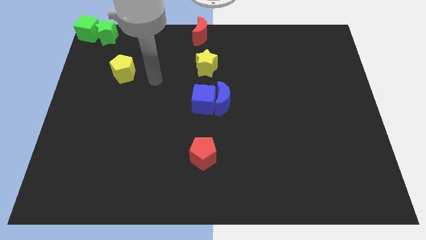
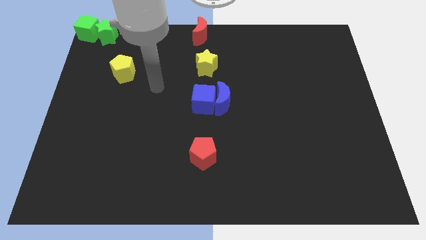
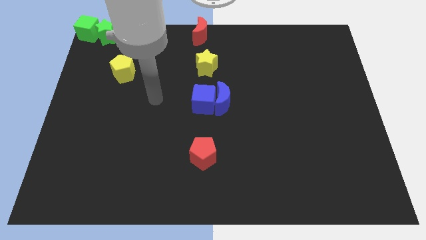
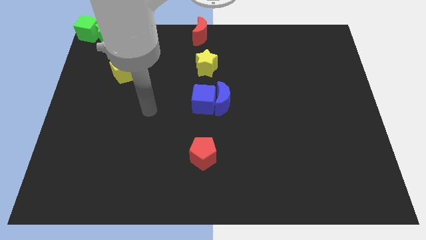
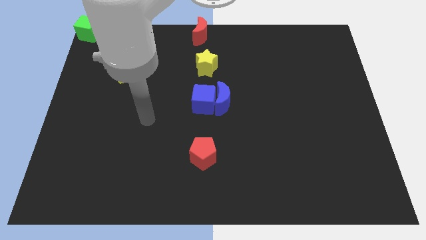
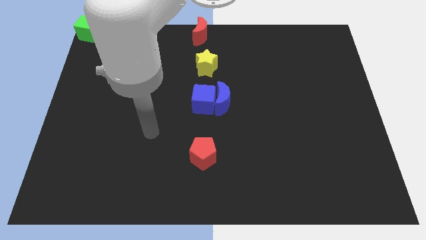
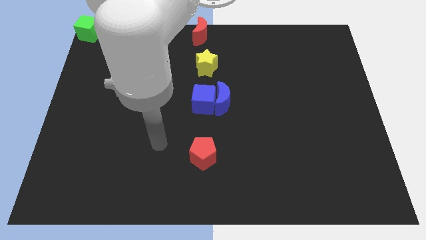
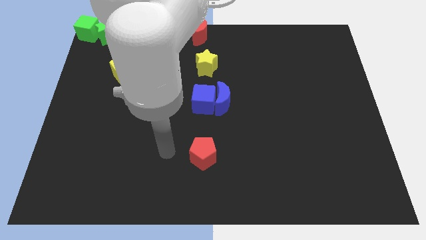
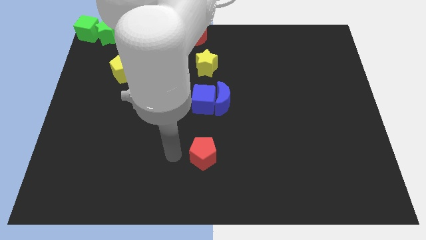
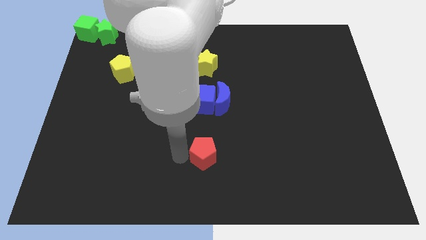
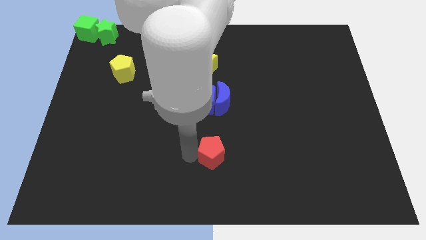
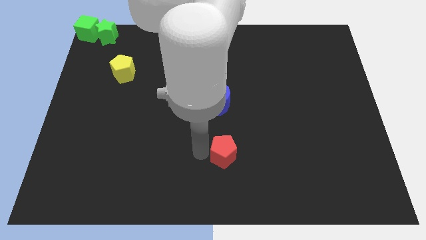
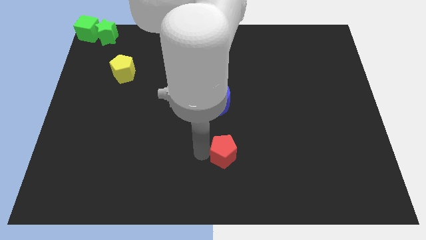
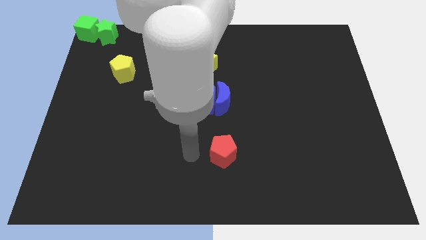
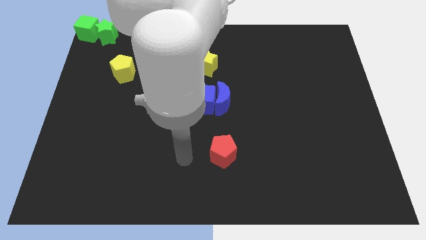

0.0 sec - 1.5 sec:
push the red pentagon underneath the blue moon

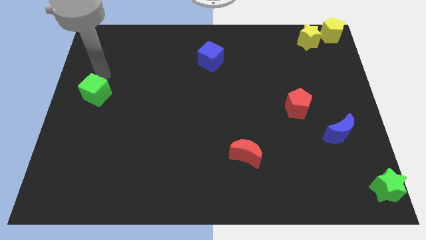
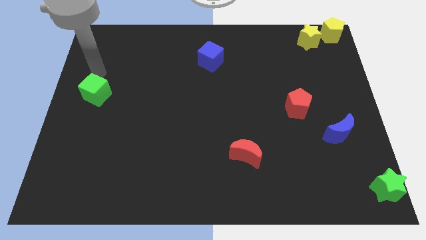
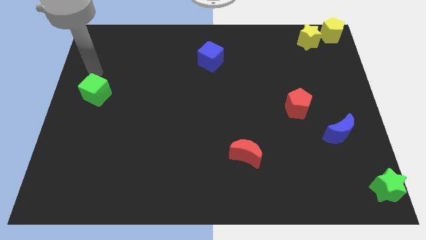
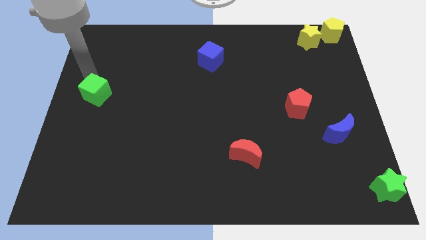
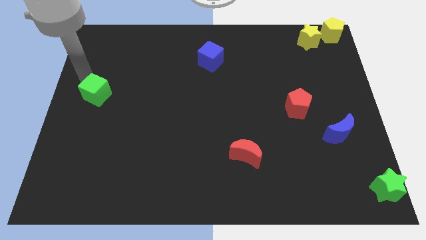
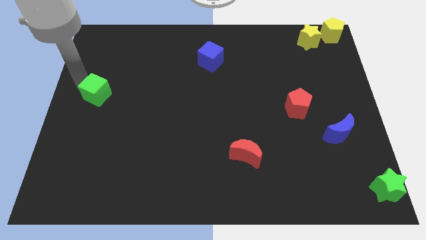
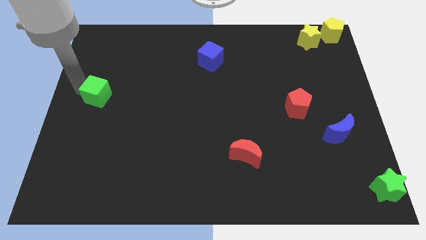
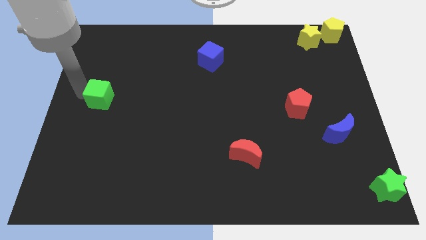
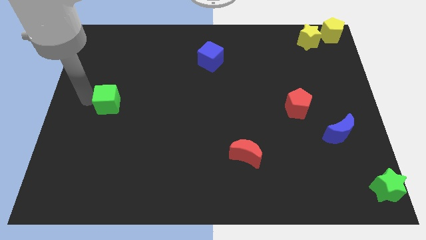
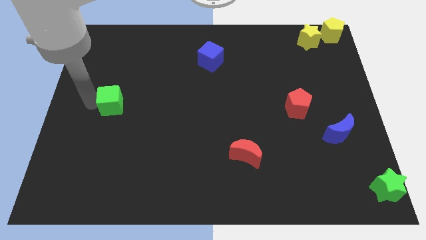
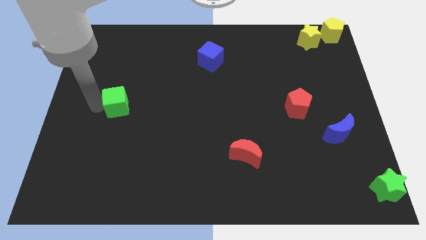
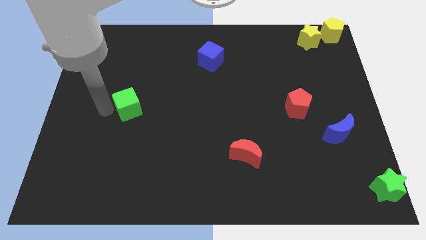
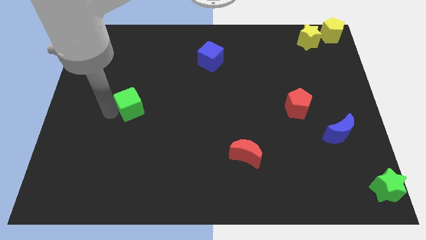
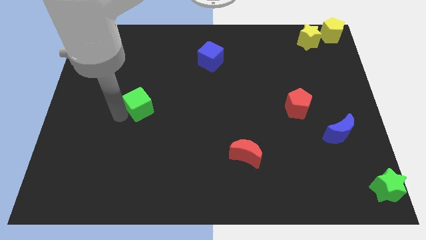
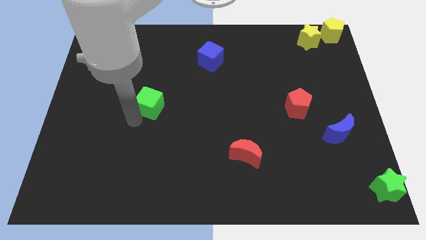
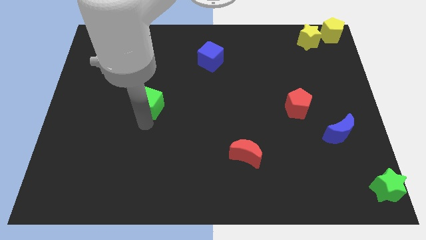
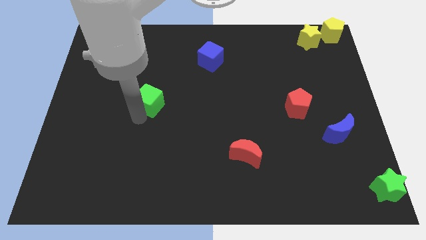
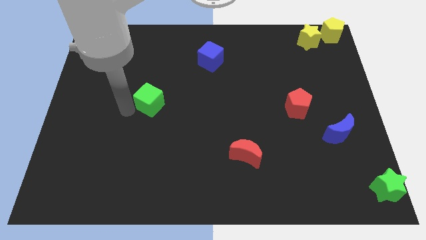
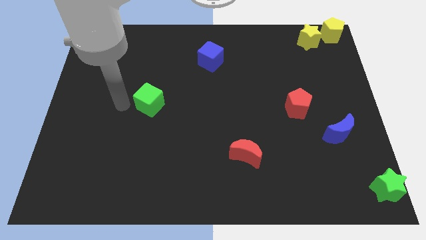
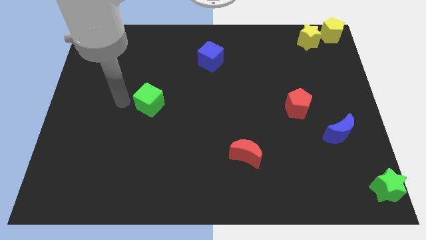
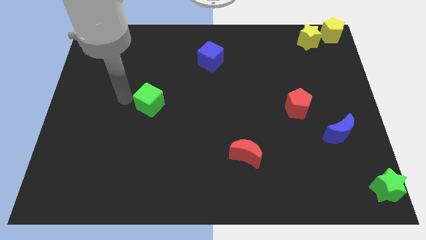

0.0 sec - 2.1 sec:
slide the green cube slightly towards center

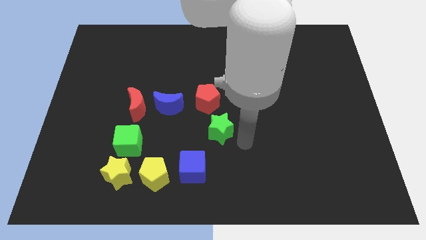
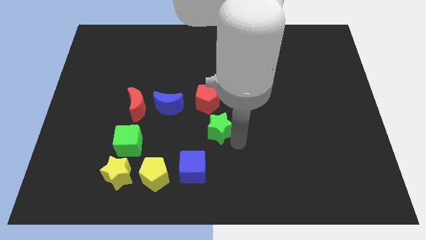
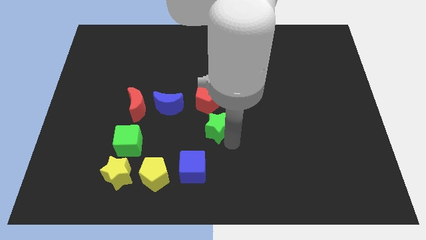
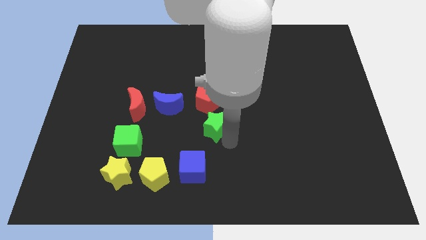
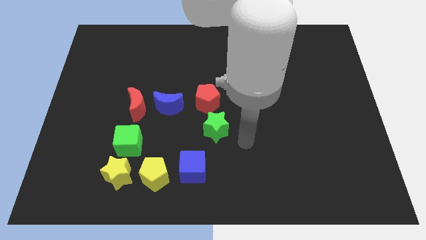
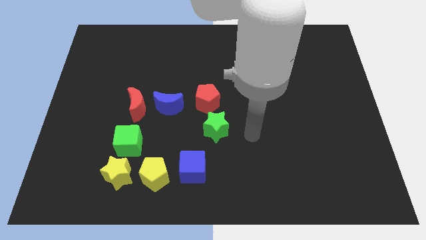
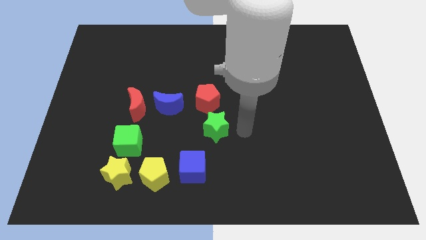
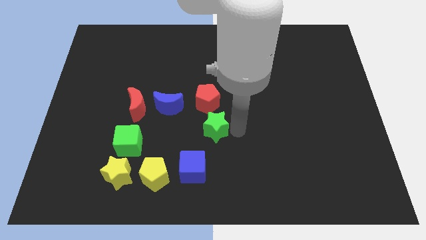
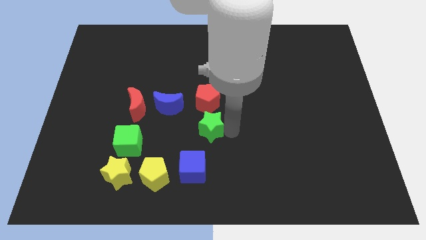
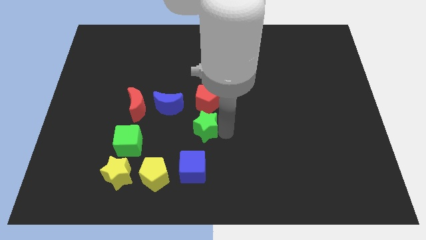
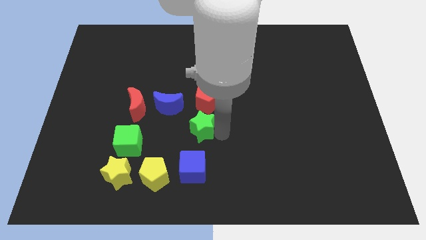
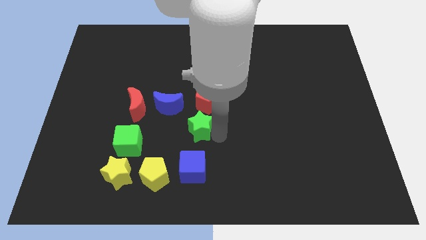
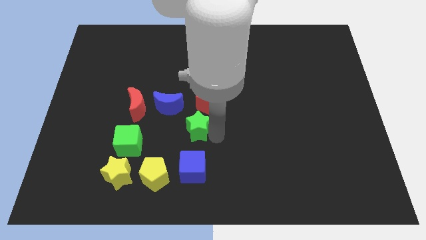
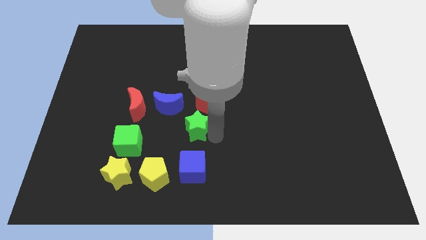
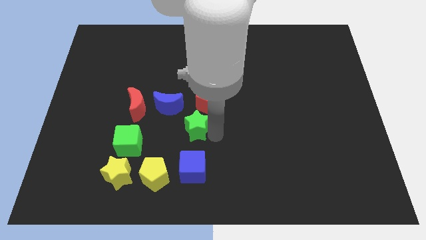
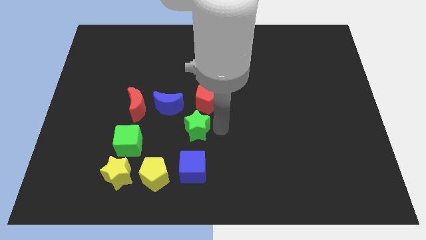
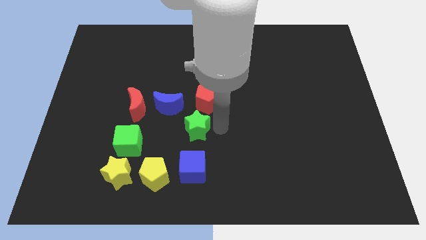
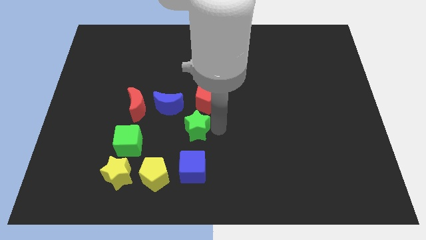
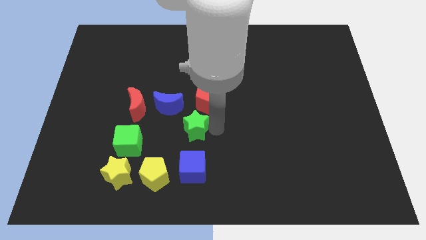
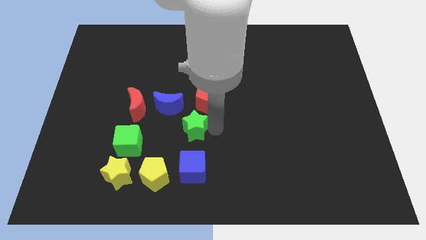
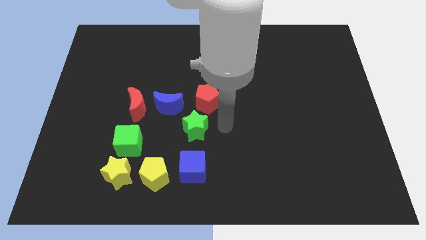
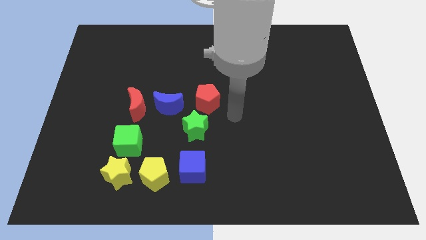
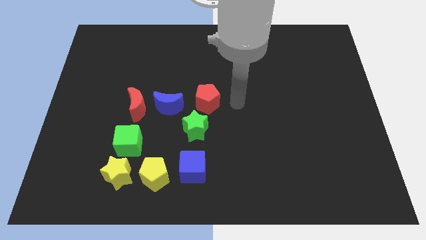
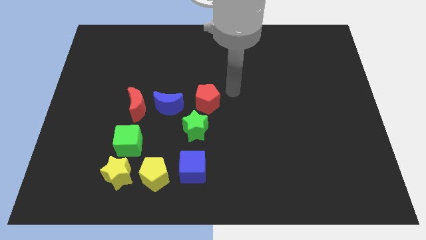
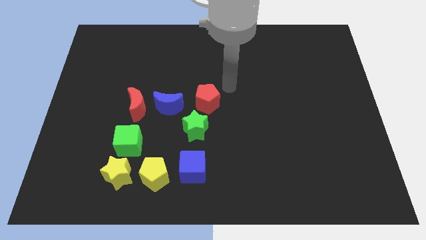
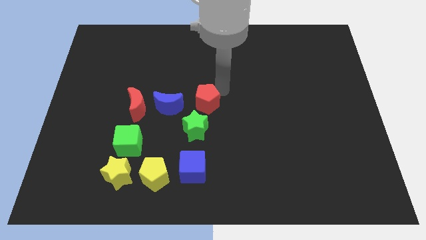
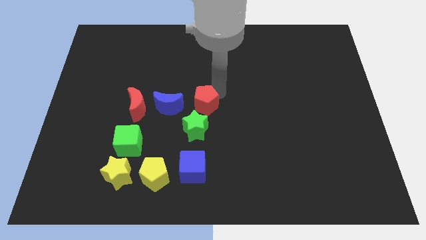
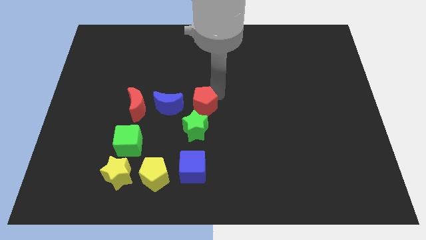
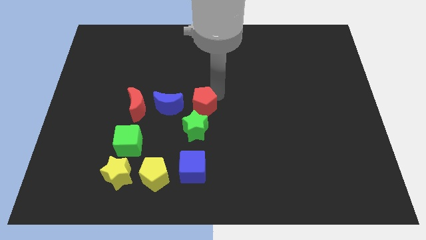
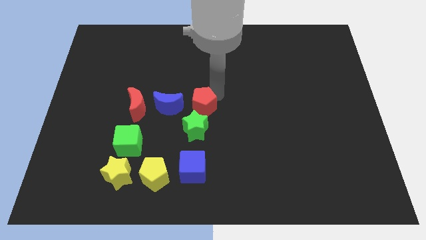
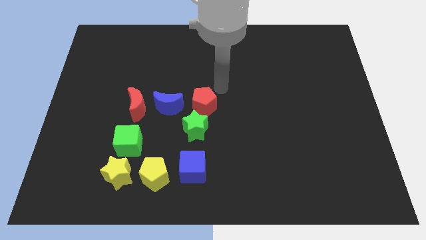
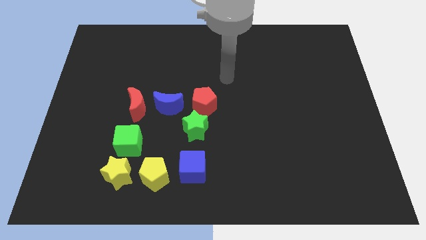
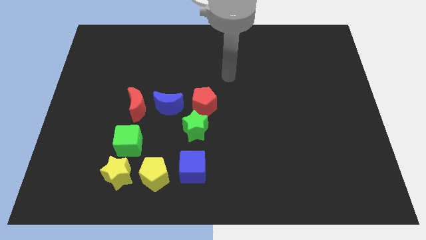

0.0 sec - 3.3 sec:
push the green star and red pentagon close to each other

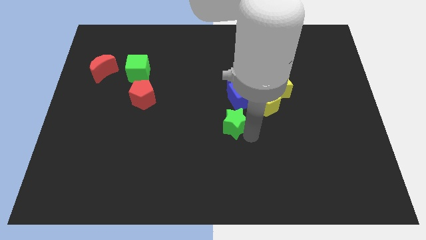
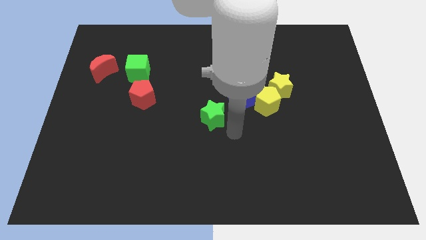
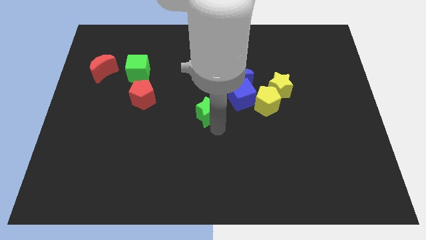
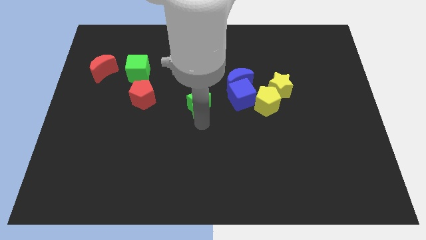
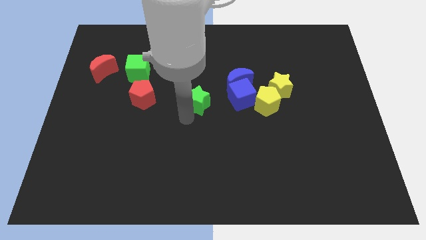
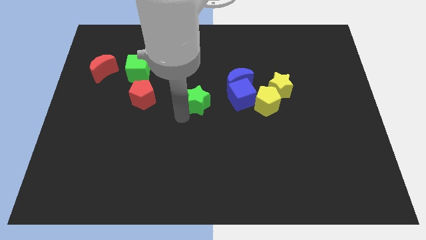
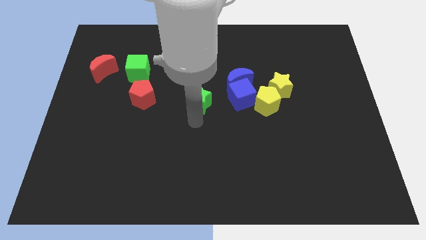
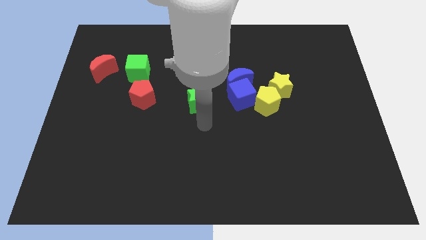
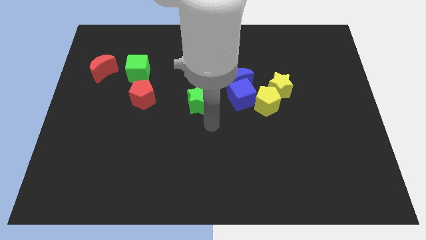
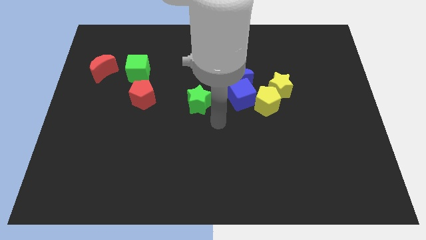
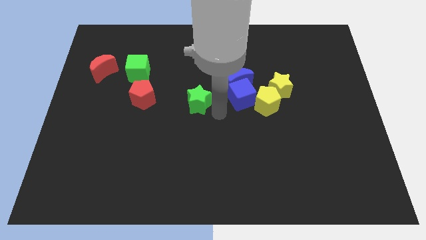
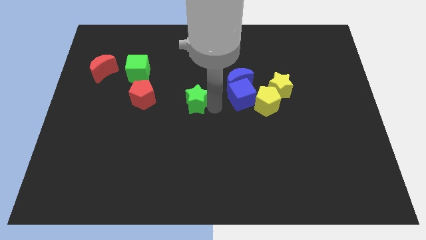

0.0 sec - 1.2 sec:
place the green star left to the blue cube

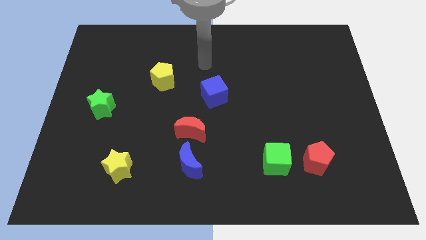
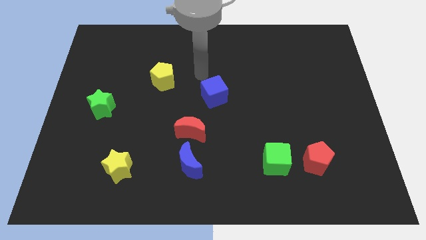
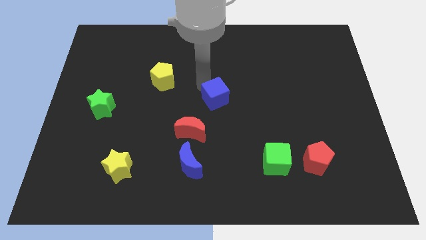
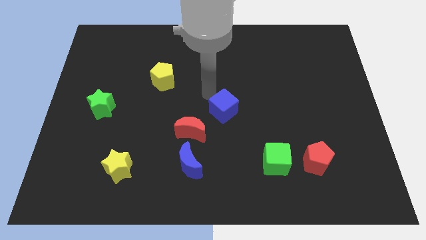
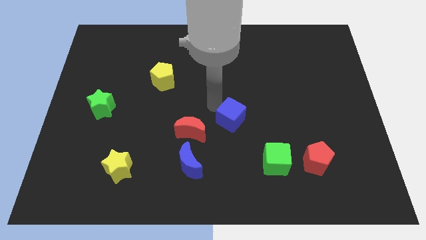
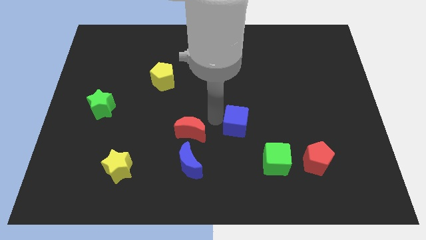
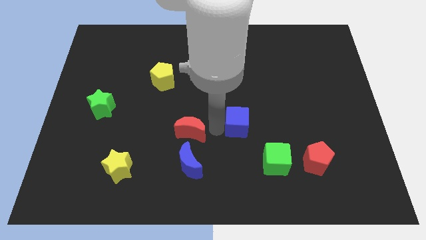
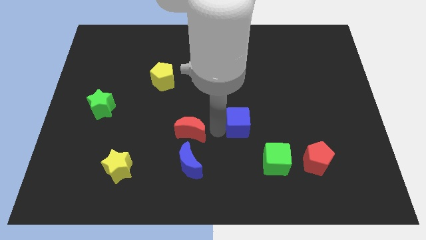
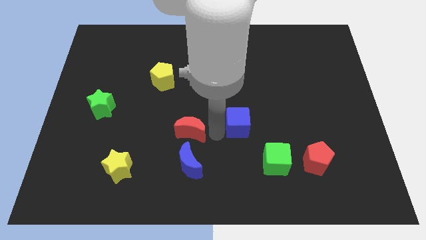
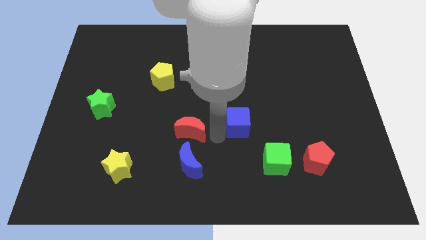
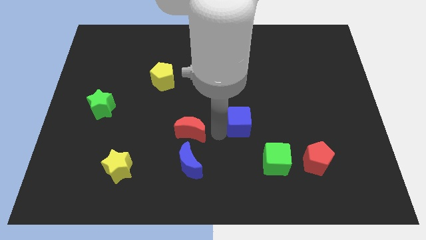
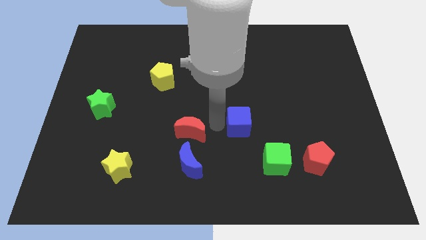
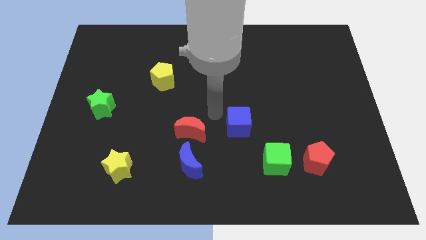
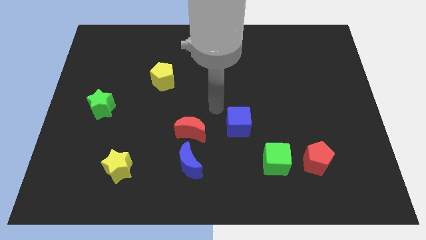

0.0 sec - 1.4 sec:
place the blue cube diagonally top left to the green cube
